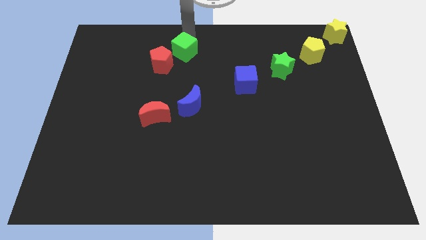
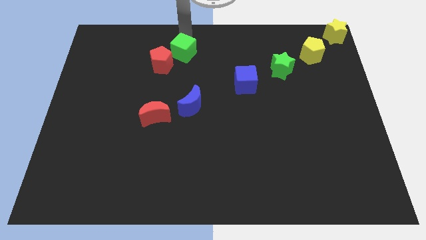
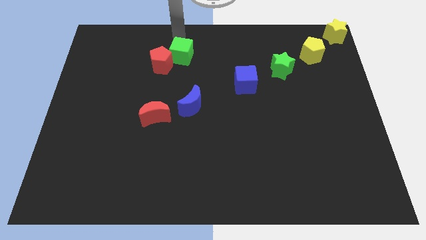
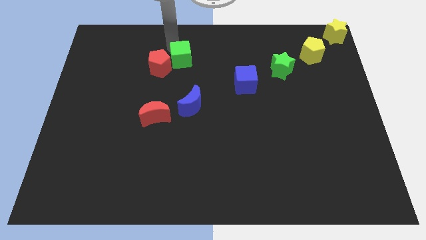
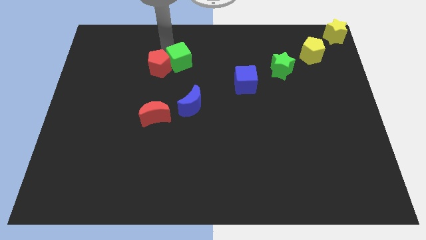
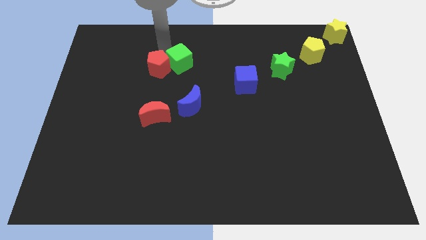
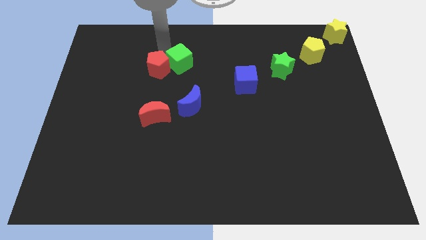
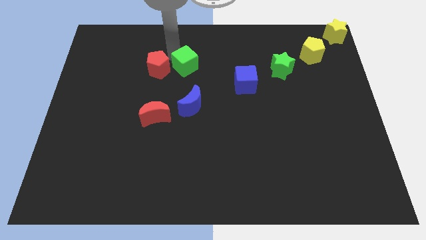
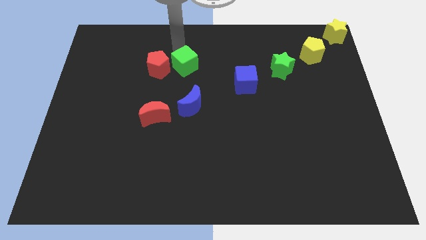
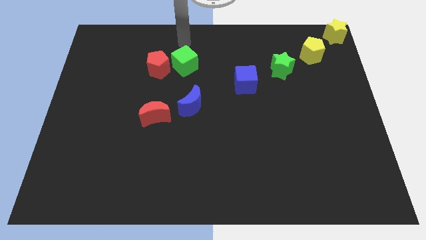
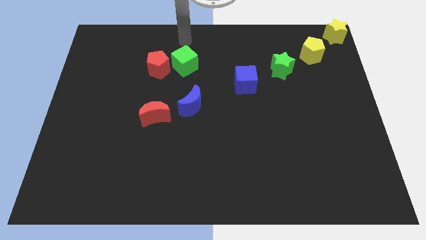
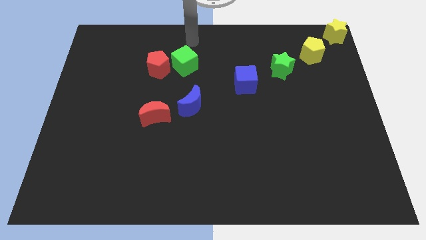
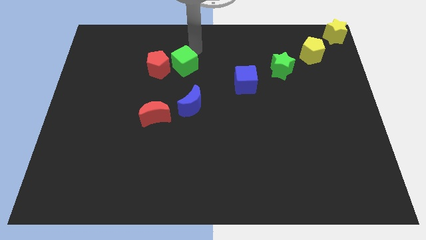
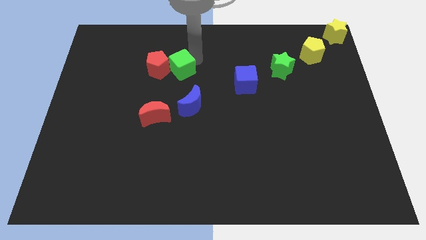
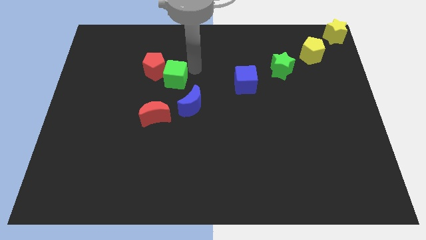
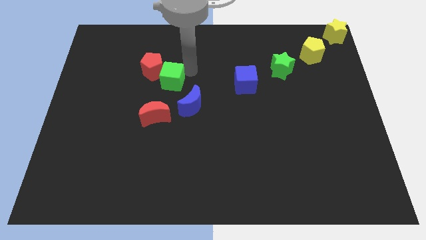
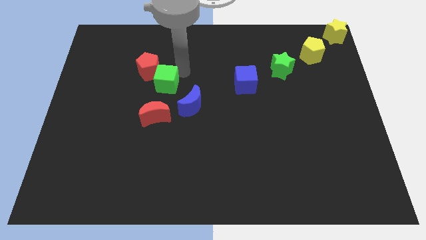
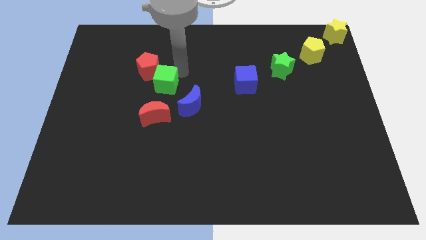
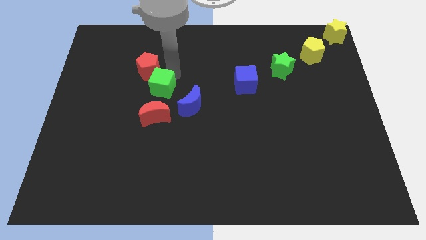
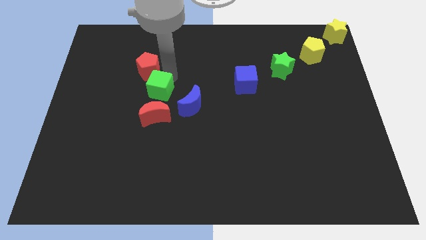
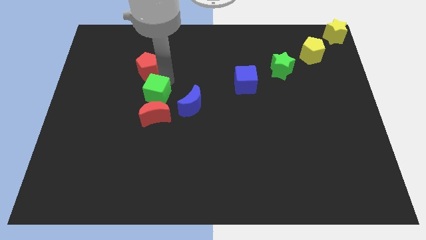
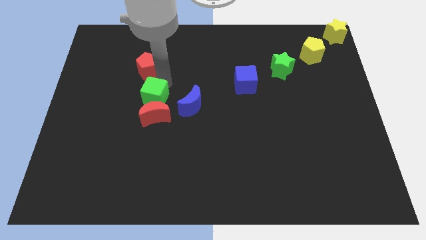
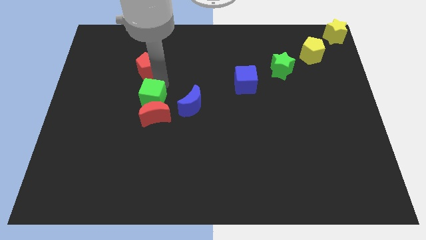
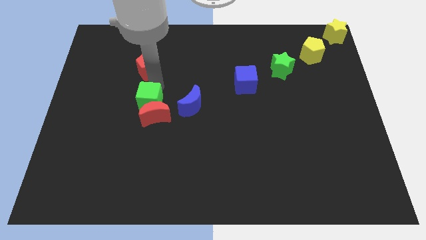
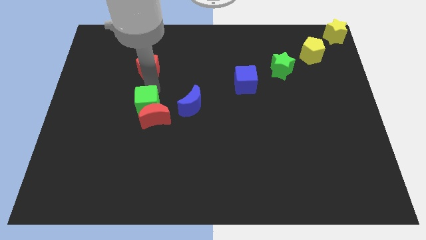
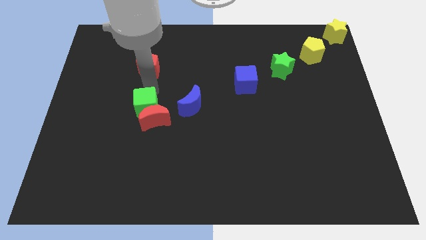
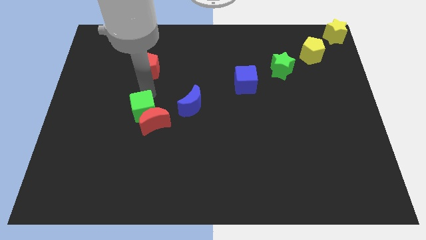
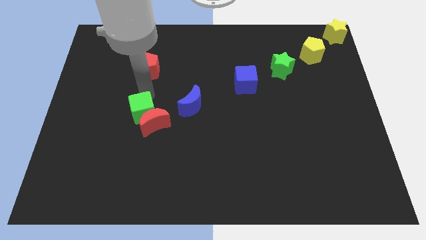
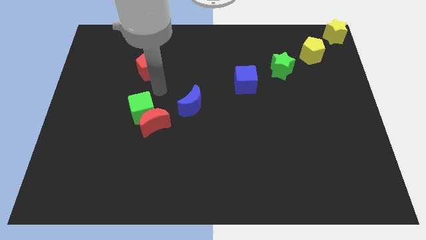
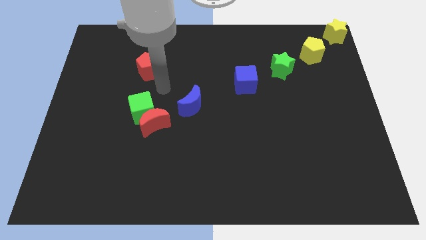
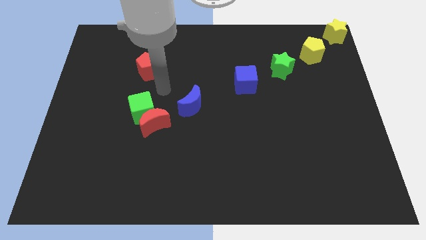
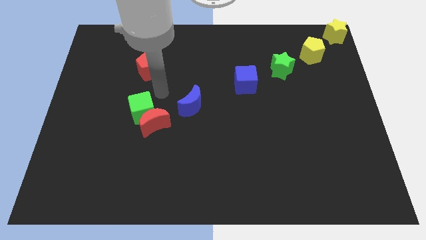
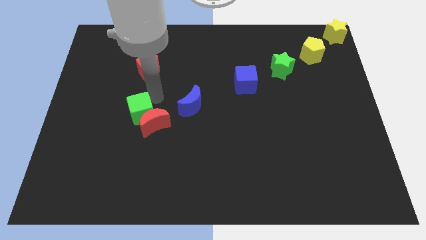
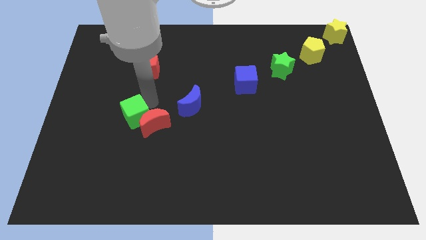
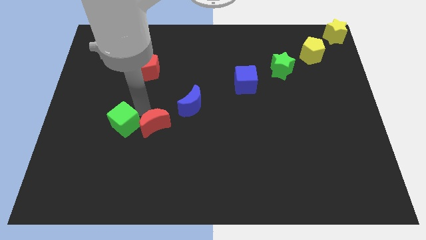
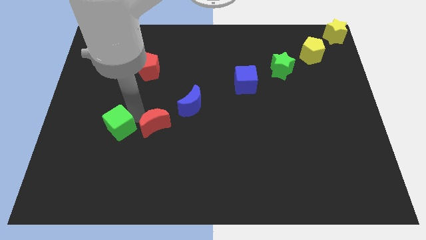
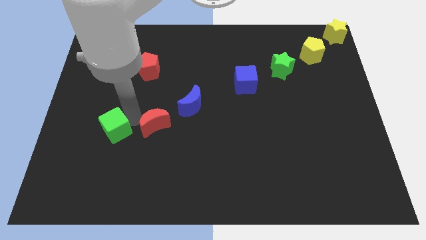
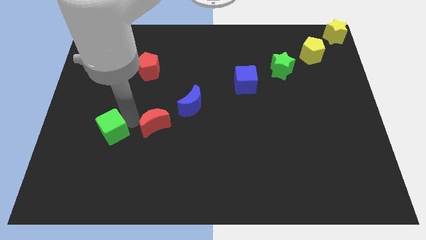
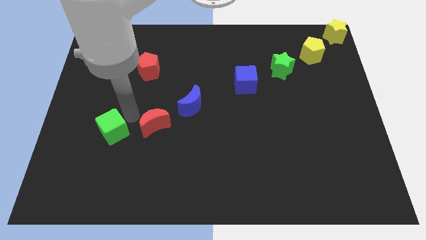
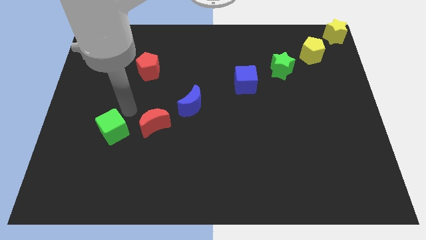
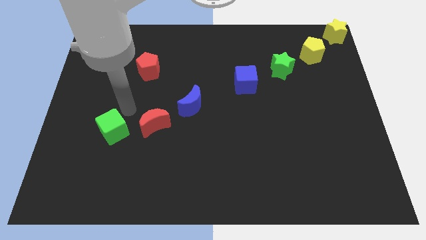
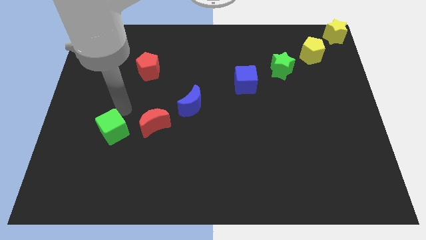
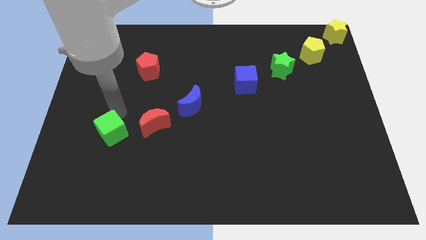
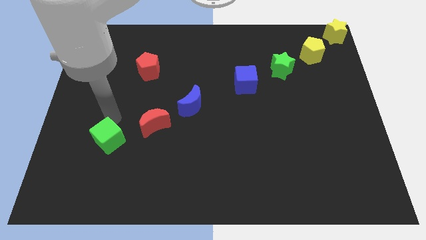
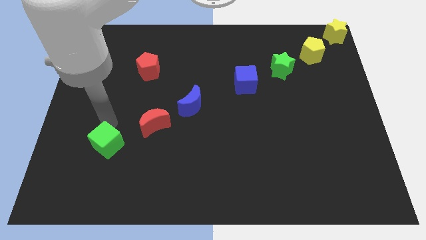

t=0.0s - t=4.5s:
push the green cube diagonally bottom left to red moon

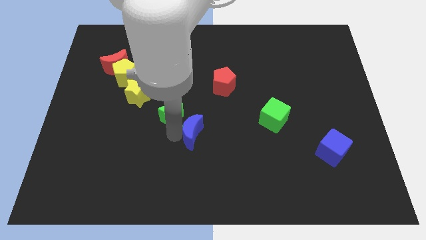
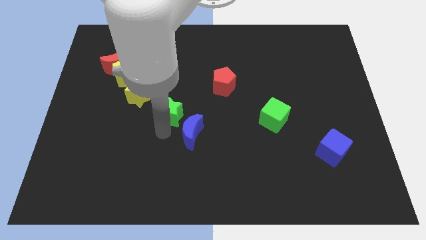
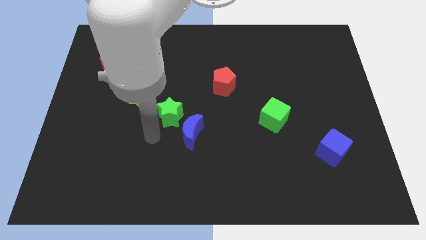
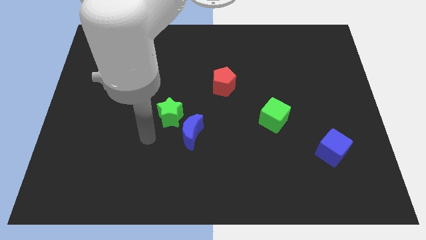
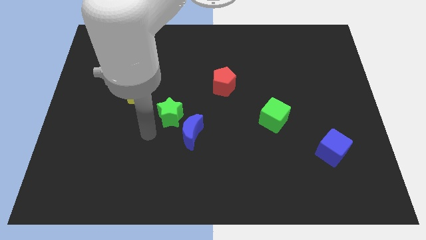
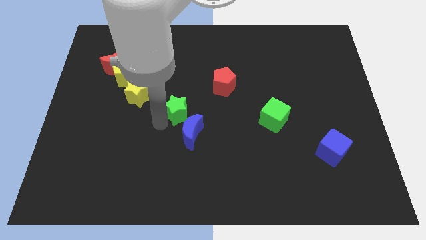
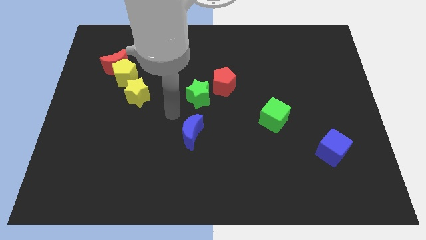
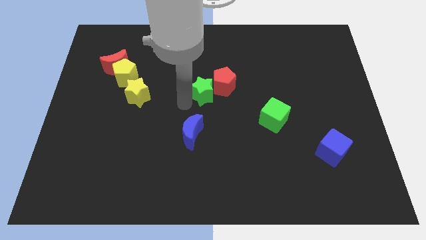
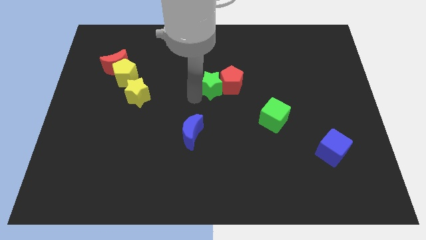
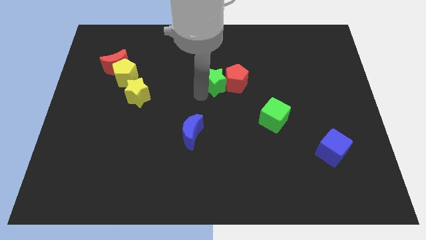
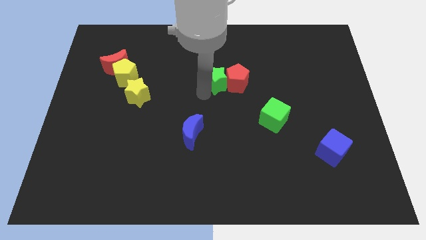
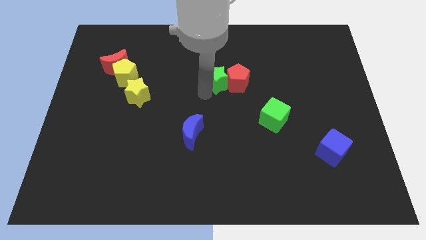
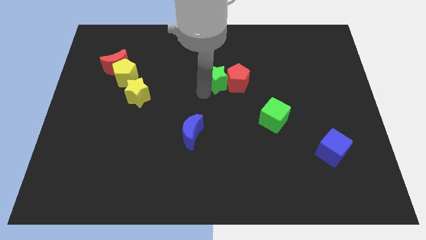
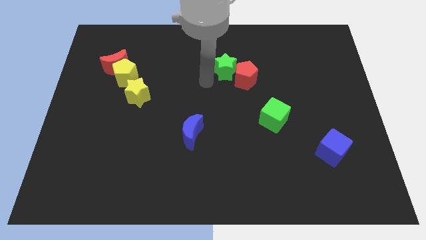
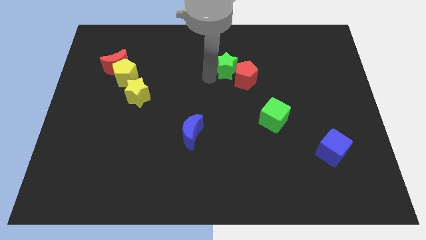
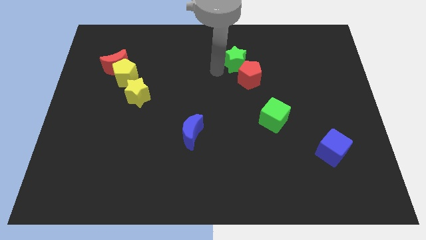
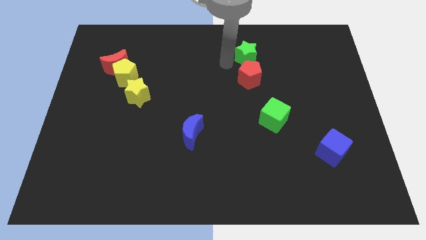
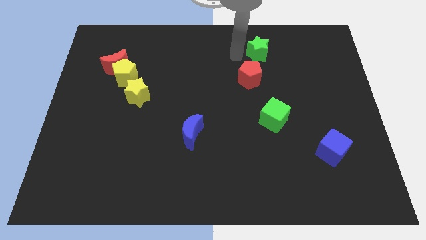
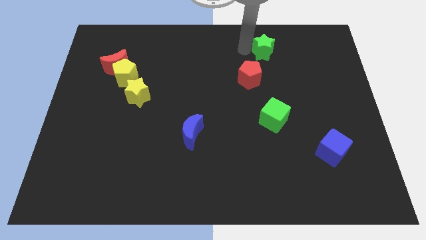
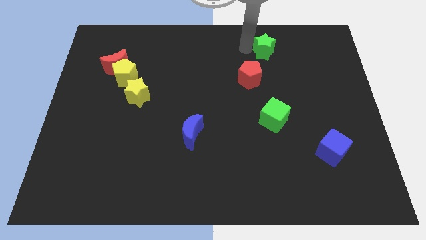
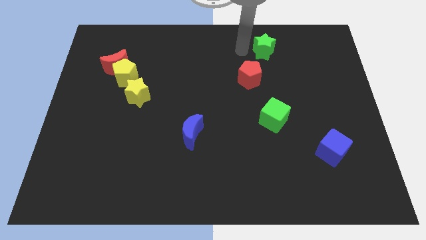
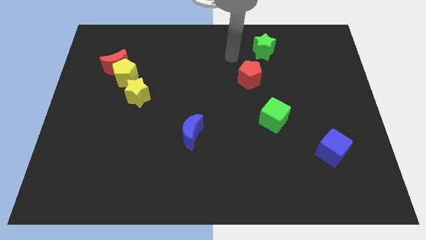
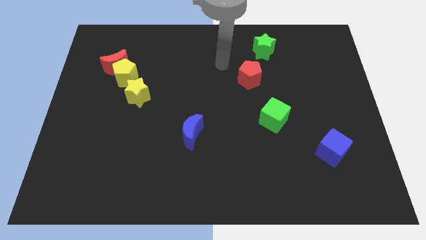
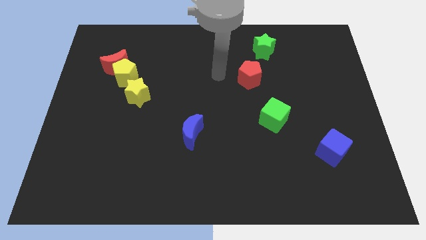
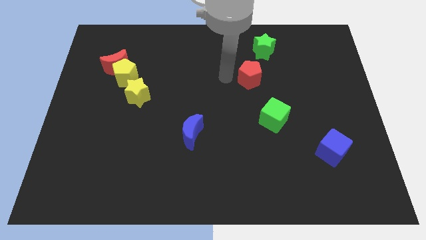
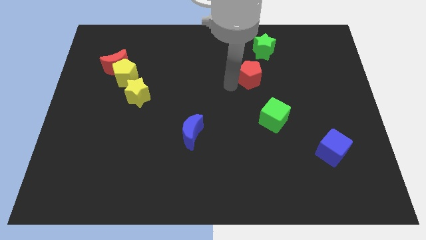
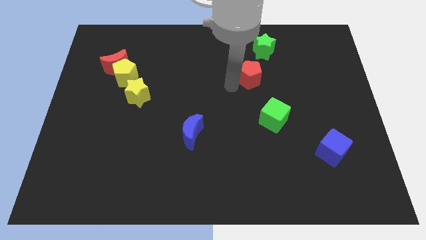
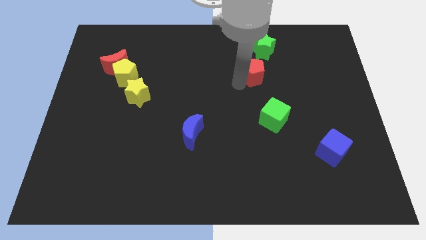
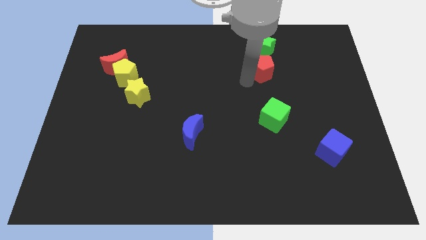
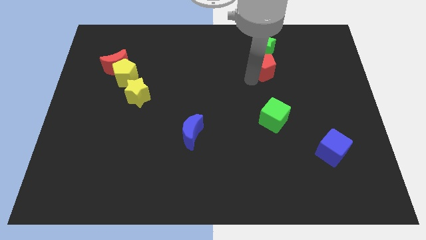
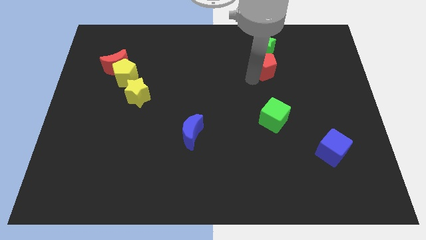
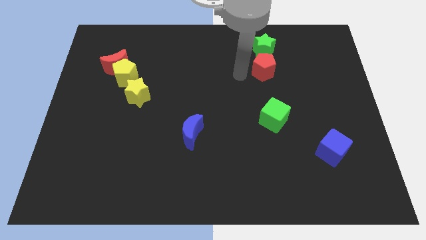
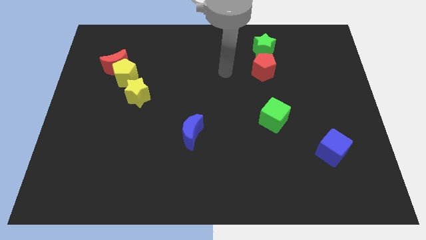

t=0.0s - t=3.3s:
push the green star along with the red pentagon towards the top right

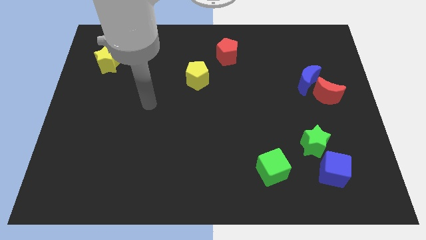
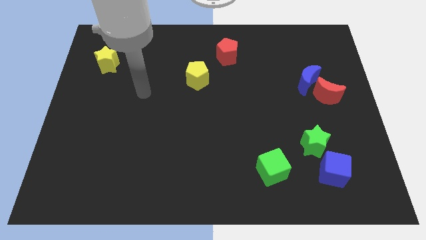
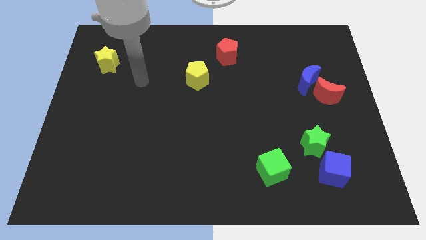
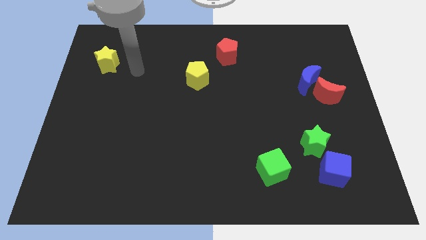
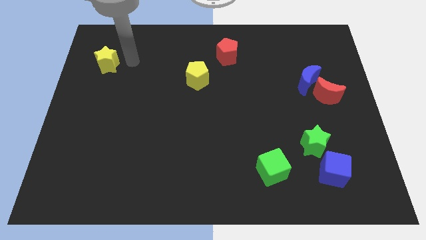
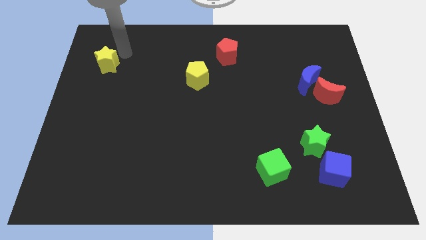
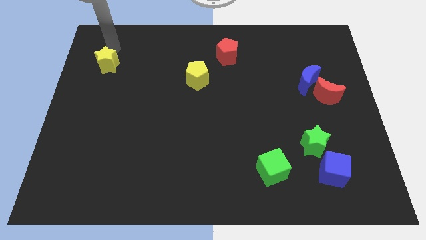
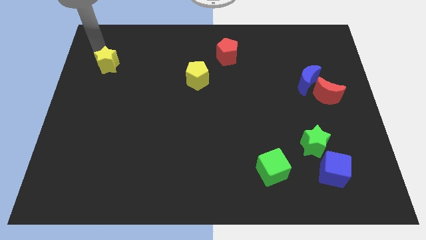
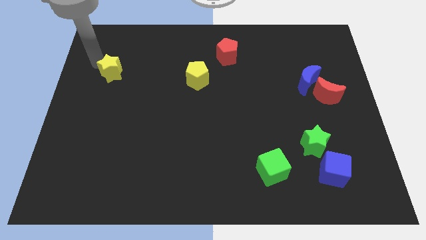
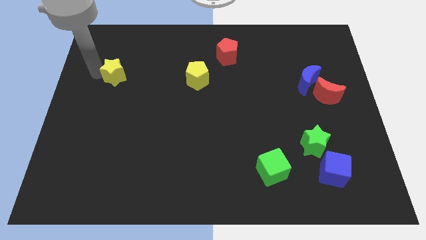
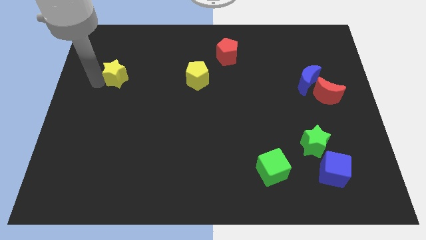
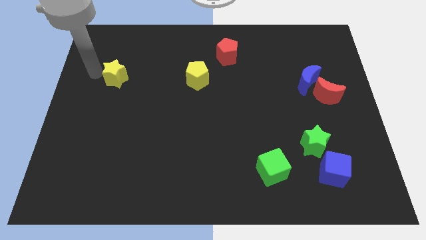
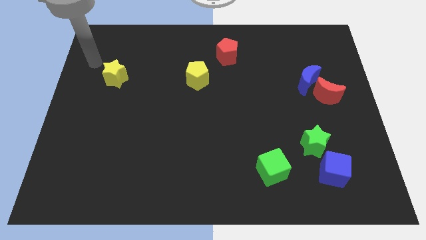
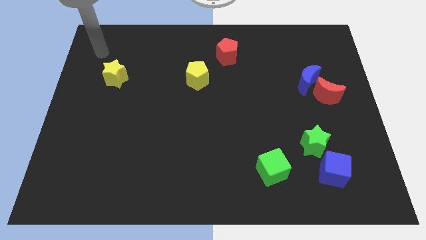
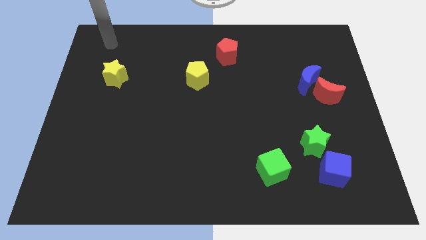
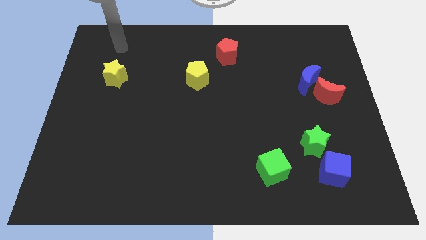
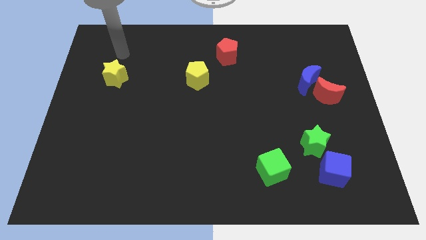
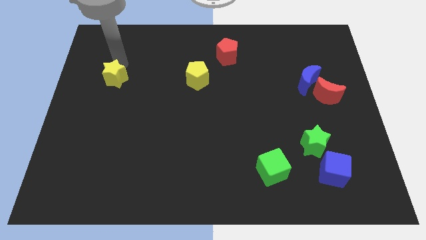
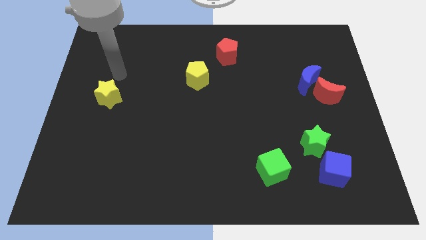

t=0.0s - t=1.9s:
place the yellow star to the left of the yellow pentagon
